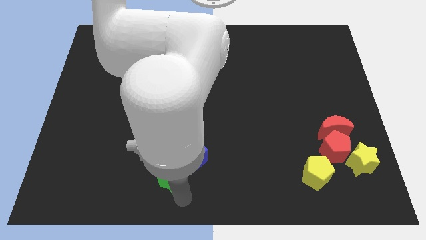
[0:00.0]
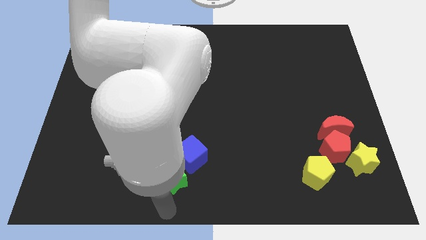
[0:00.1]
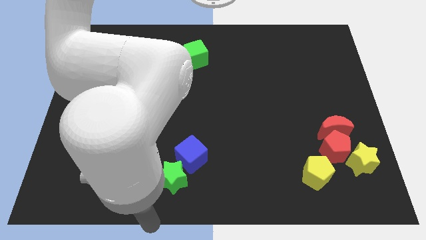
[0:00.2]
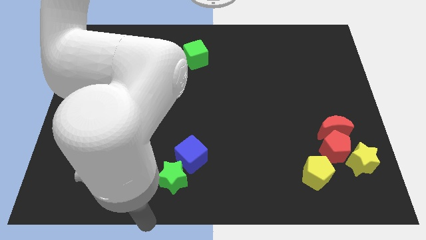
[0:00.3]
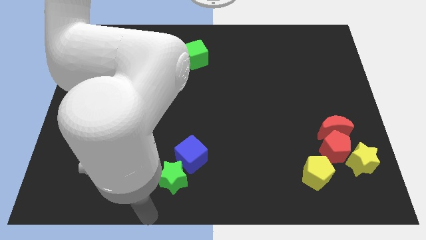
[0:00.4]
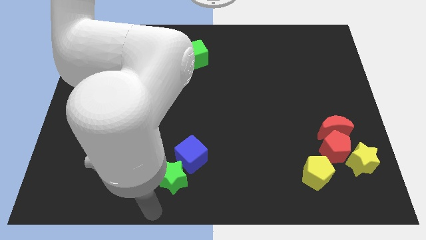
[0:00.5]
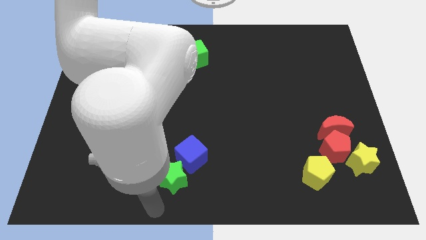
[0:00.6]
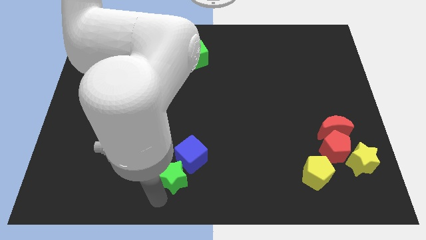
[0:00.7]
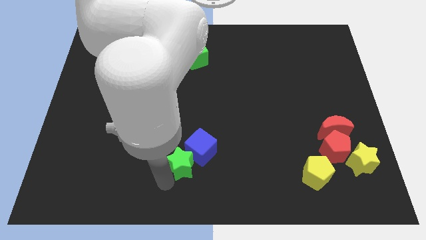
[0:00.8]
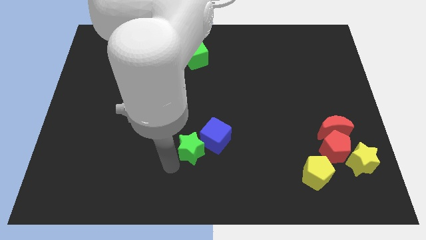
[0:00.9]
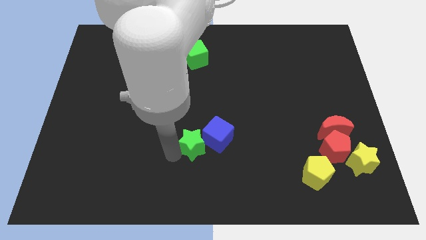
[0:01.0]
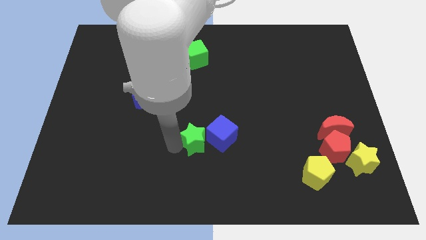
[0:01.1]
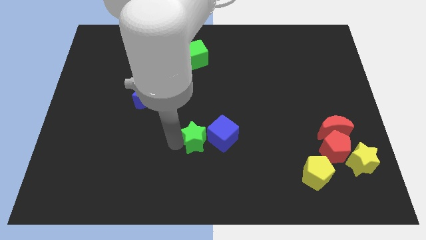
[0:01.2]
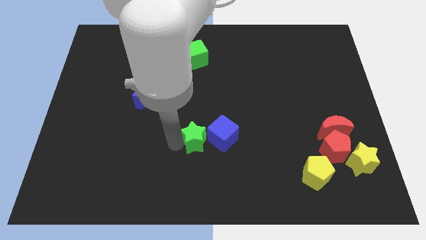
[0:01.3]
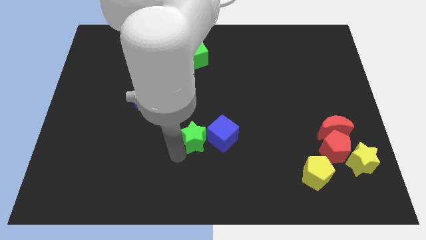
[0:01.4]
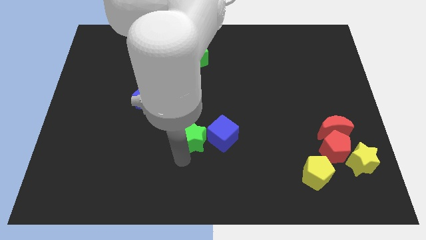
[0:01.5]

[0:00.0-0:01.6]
move the green star and blue cube towards the center side

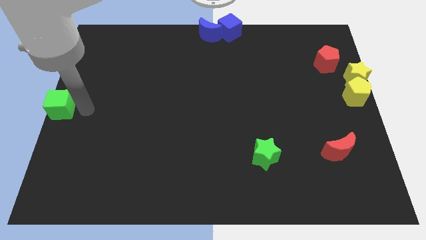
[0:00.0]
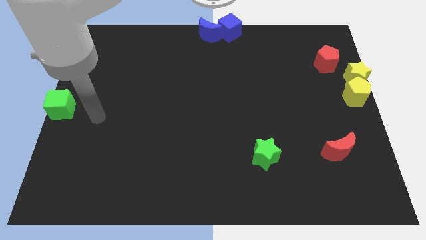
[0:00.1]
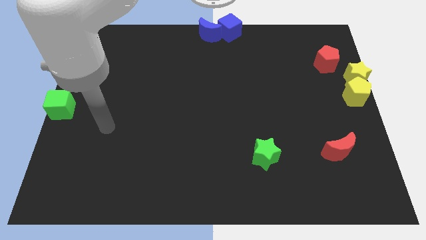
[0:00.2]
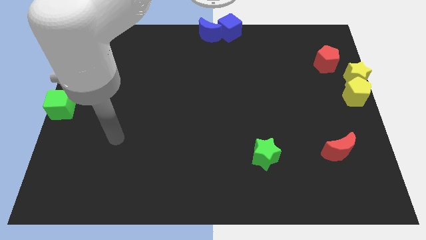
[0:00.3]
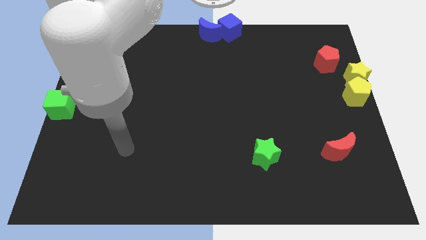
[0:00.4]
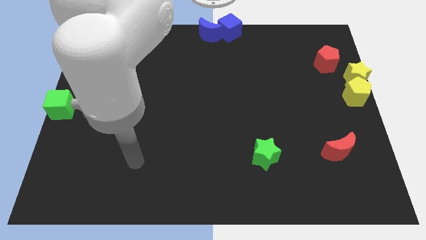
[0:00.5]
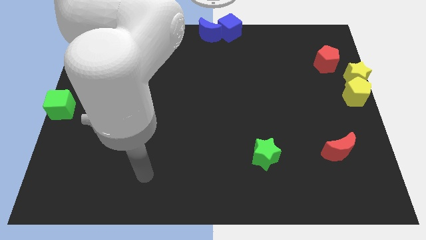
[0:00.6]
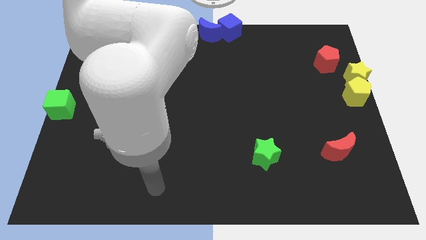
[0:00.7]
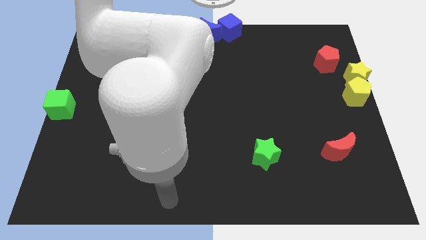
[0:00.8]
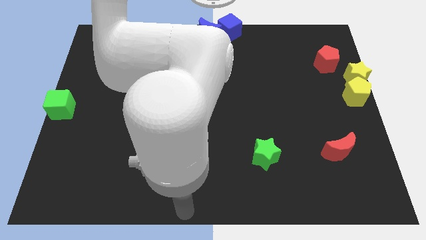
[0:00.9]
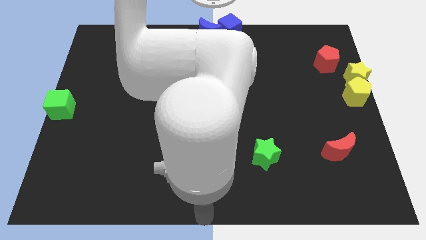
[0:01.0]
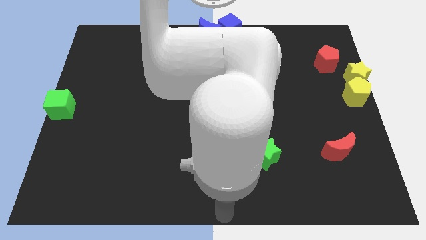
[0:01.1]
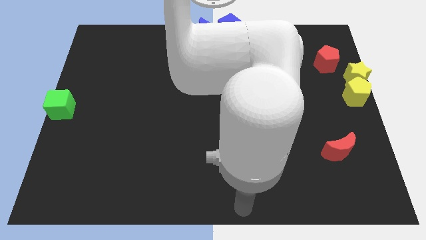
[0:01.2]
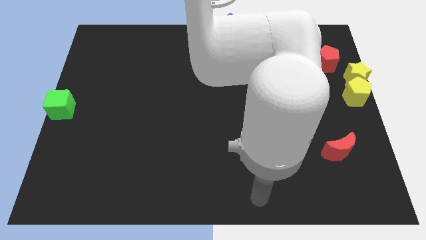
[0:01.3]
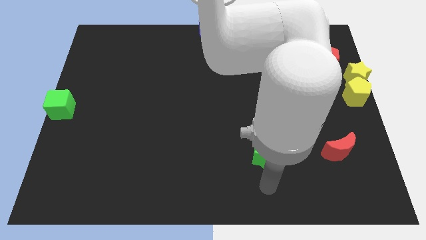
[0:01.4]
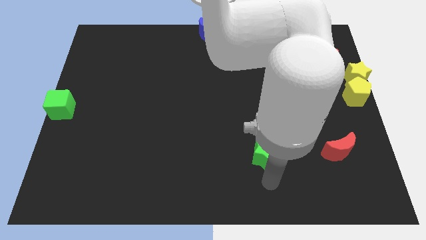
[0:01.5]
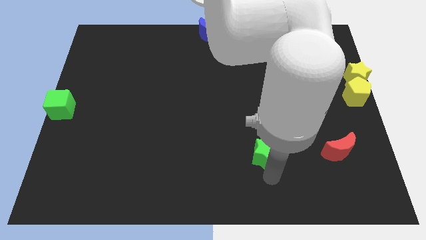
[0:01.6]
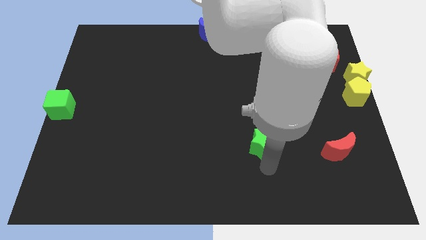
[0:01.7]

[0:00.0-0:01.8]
place the arm on the down side of the green star

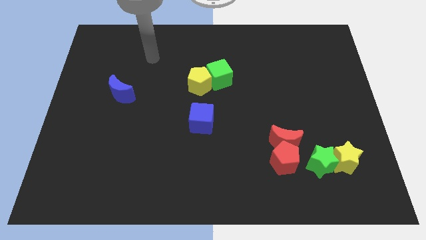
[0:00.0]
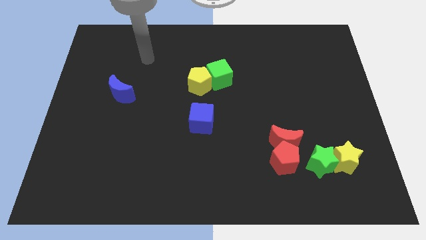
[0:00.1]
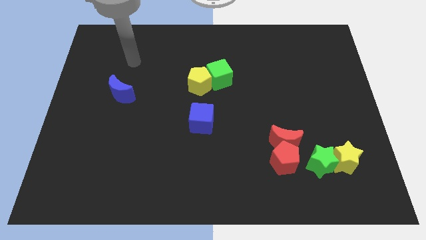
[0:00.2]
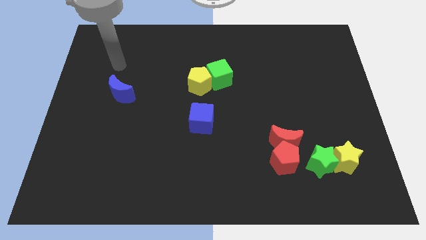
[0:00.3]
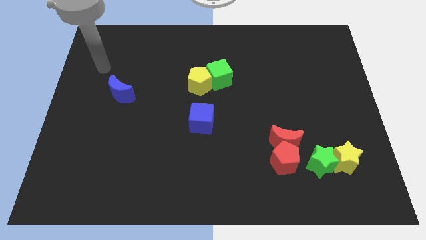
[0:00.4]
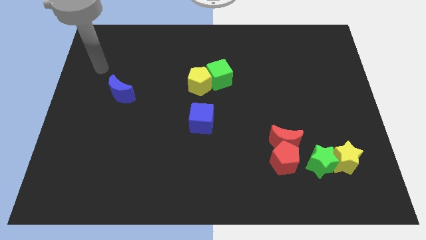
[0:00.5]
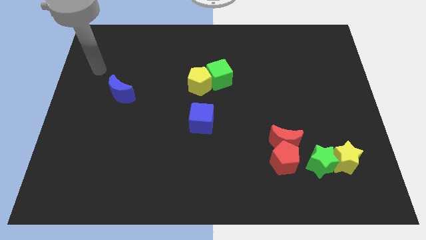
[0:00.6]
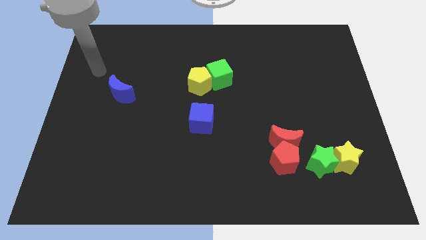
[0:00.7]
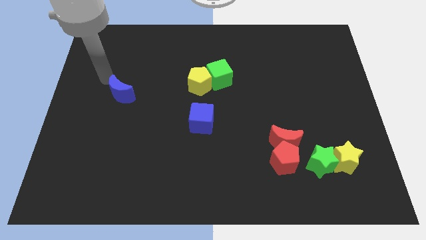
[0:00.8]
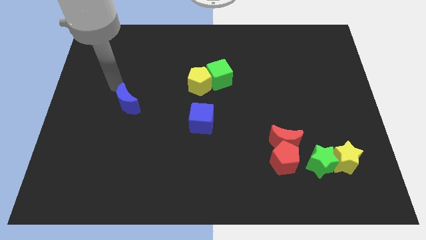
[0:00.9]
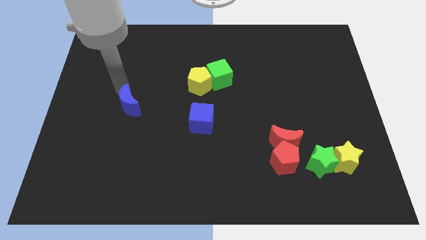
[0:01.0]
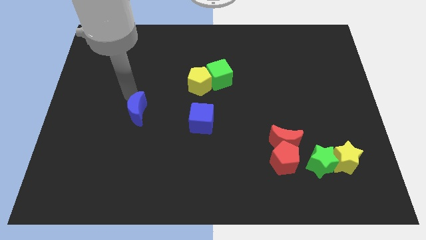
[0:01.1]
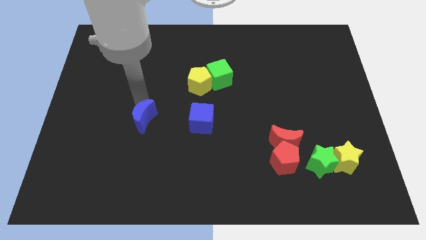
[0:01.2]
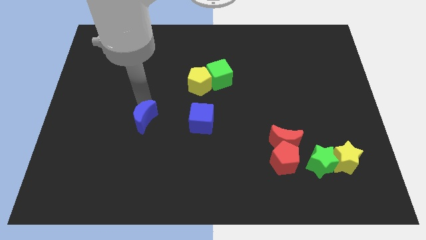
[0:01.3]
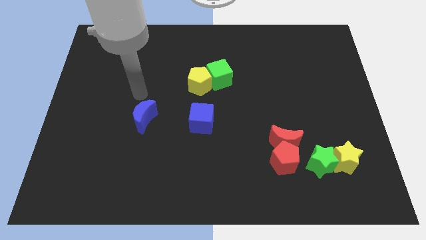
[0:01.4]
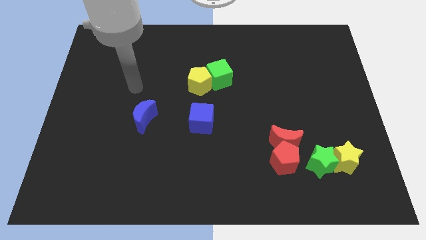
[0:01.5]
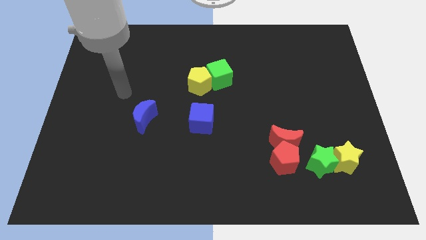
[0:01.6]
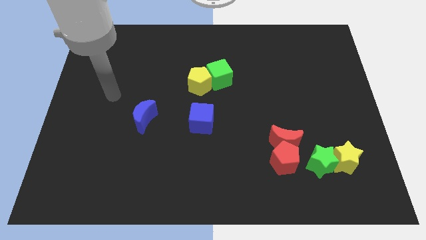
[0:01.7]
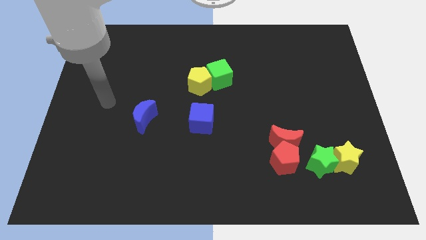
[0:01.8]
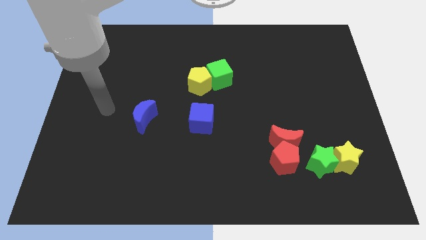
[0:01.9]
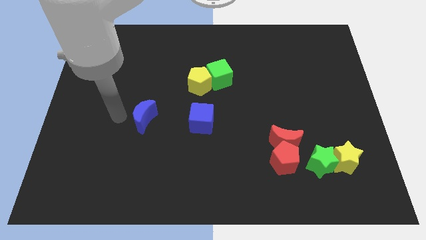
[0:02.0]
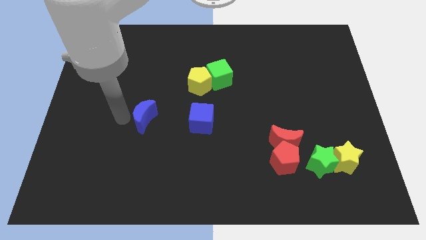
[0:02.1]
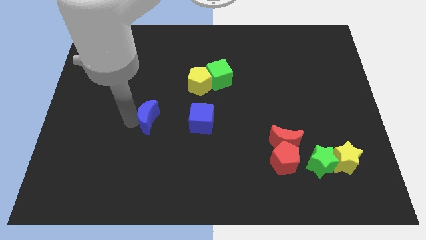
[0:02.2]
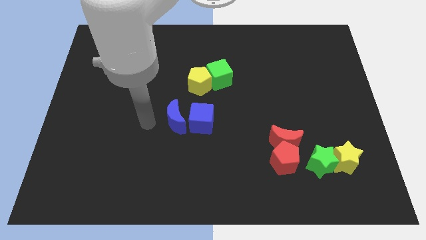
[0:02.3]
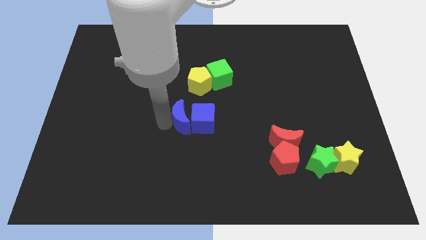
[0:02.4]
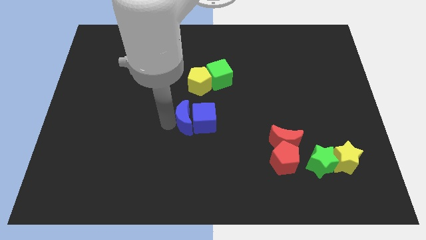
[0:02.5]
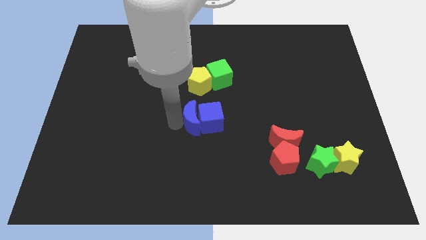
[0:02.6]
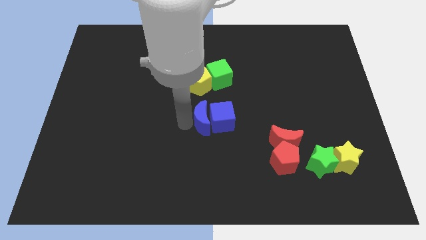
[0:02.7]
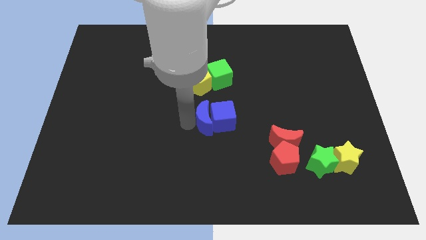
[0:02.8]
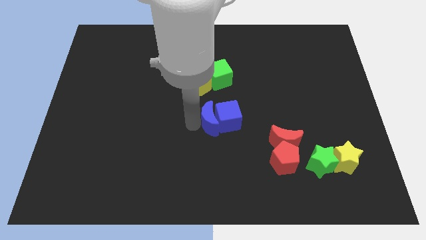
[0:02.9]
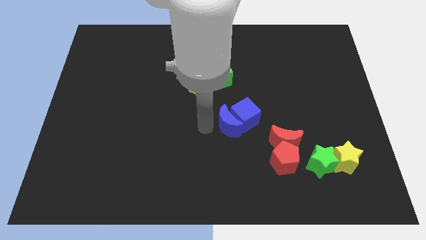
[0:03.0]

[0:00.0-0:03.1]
push the blue moon and blue cube to the center of the board

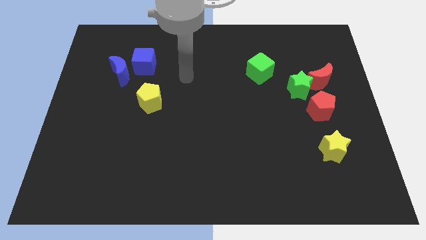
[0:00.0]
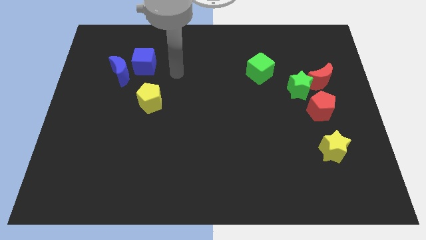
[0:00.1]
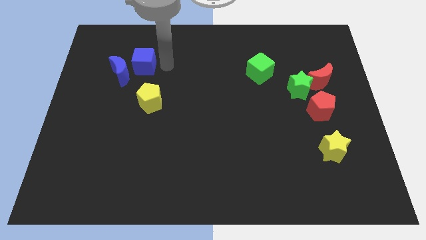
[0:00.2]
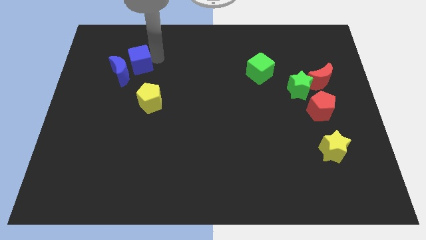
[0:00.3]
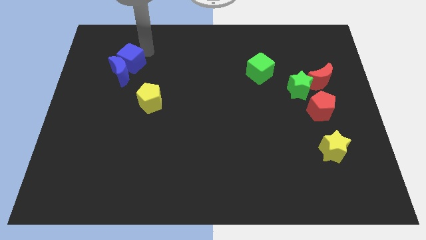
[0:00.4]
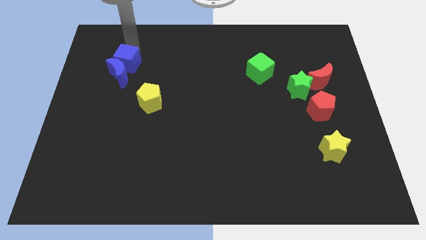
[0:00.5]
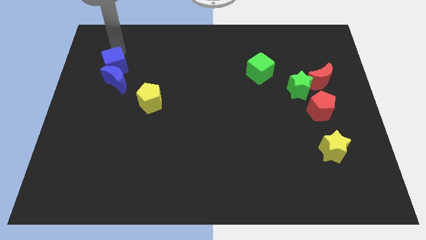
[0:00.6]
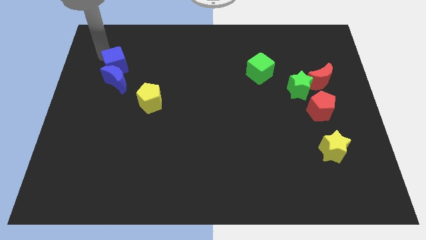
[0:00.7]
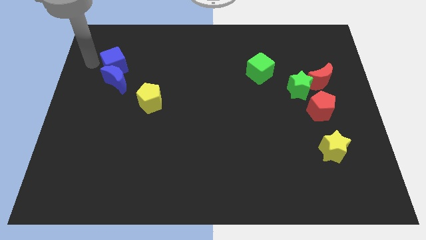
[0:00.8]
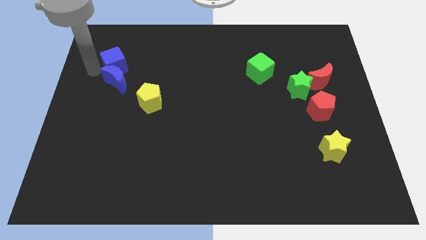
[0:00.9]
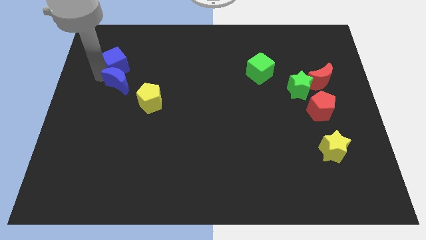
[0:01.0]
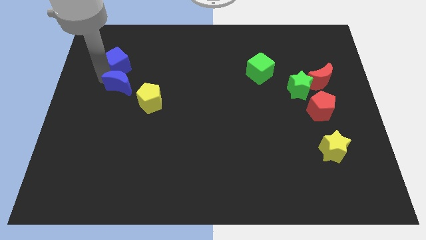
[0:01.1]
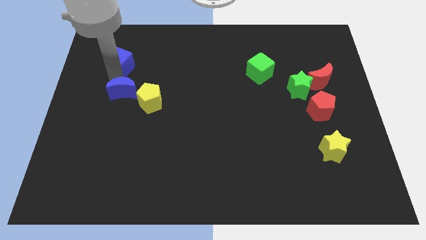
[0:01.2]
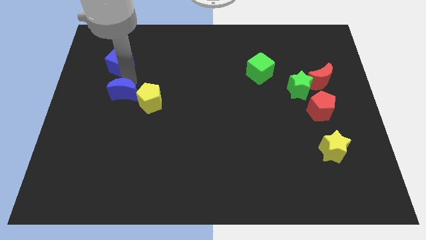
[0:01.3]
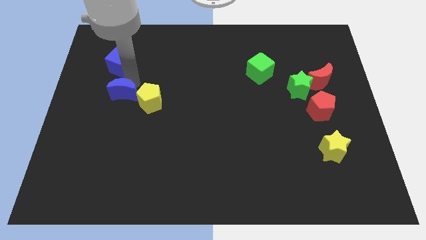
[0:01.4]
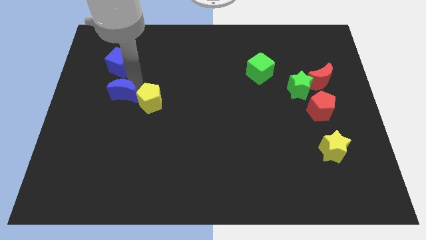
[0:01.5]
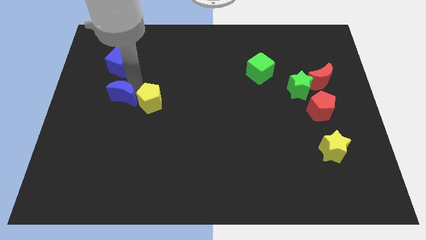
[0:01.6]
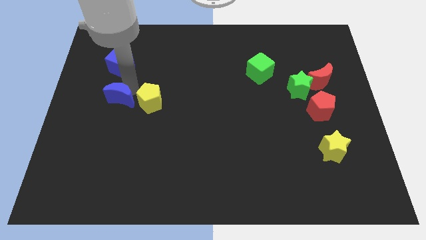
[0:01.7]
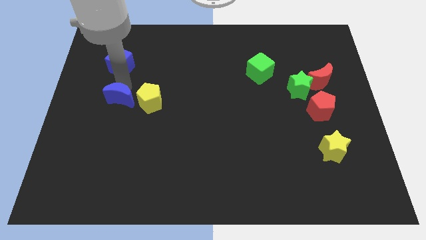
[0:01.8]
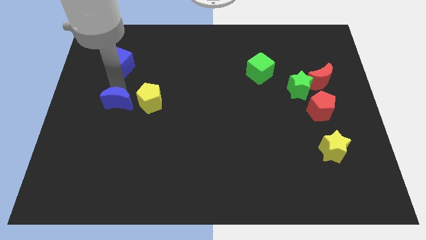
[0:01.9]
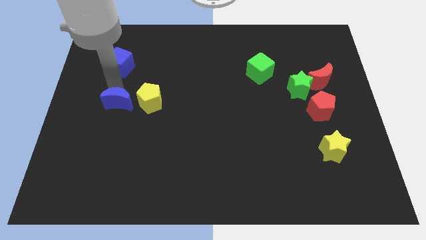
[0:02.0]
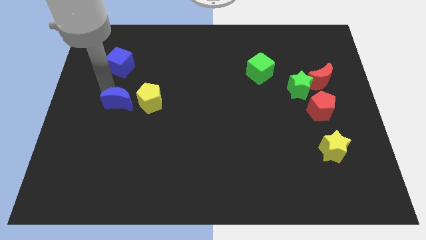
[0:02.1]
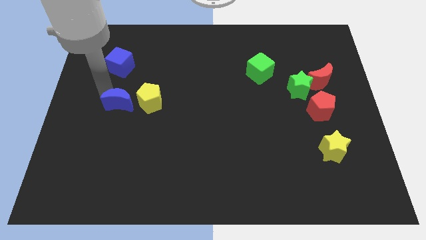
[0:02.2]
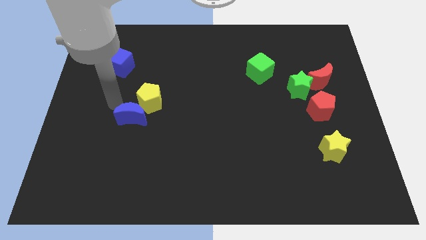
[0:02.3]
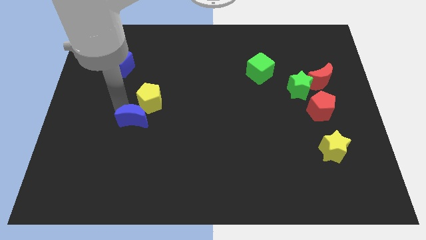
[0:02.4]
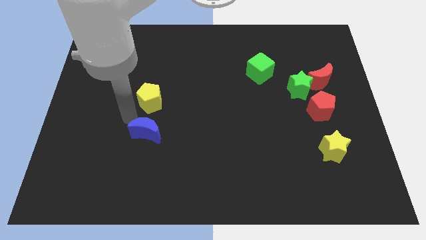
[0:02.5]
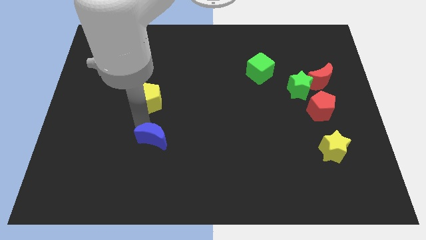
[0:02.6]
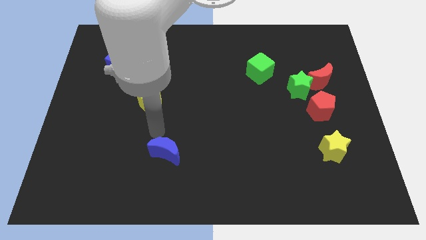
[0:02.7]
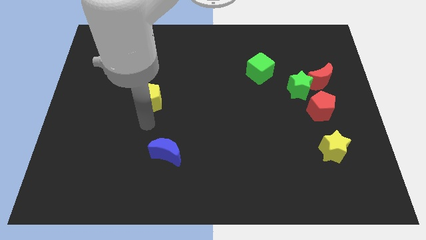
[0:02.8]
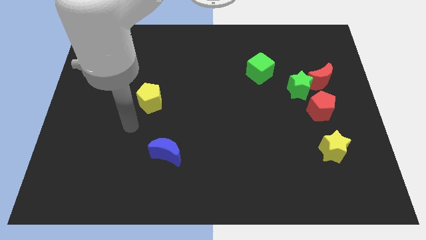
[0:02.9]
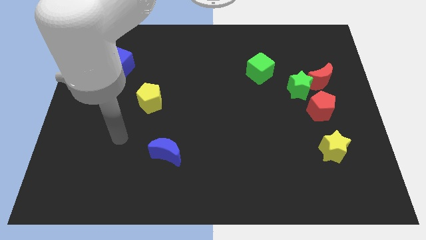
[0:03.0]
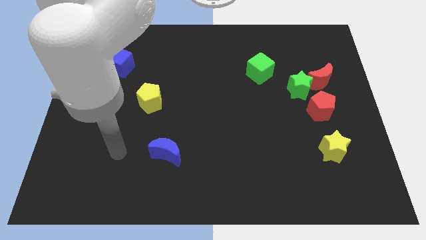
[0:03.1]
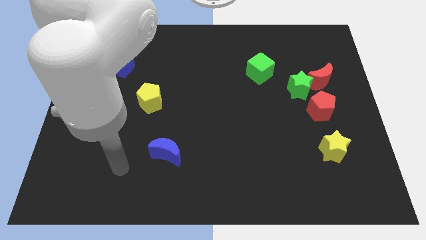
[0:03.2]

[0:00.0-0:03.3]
place the blue moon to the center of the board
